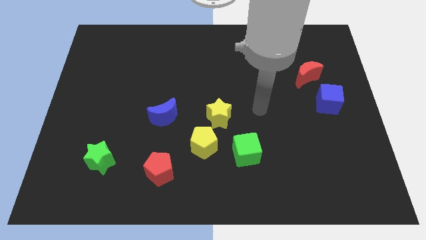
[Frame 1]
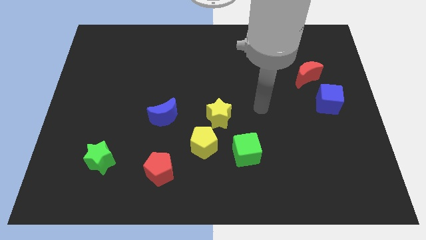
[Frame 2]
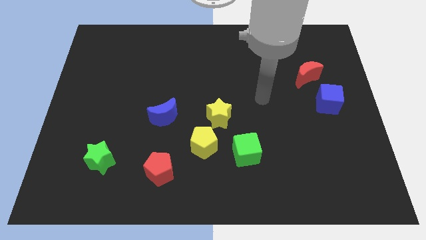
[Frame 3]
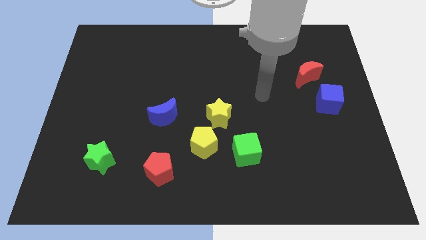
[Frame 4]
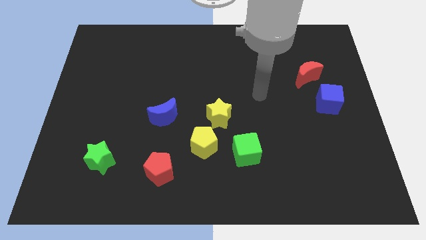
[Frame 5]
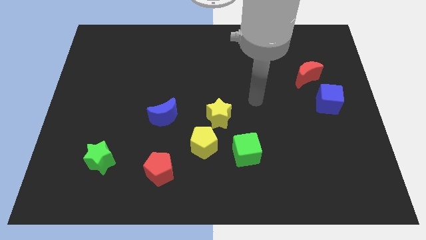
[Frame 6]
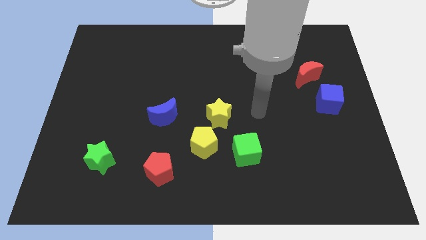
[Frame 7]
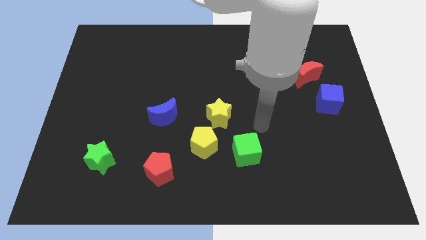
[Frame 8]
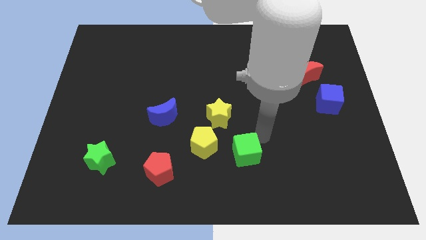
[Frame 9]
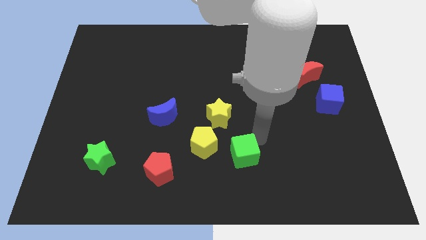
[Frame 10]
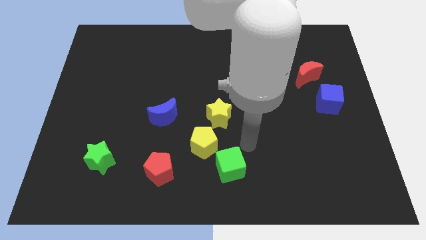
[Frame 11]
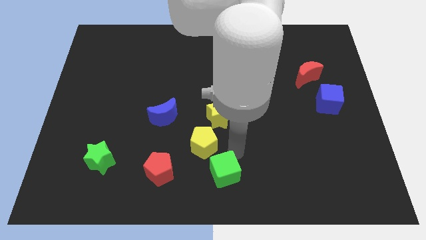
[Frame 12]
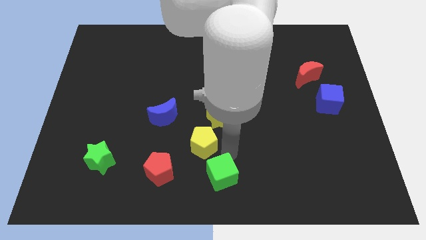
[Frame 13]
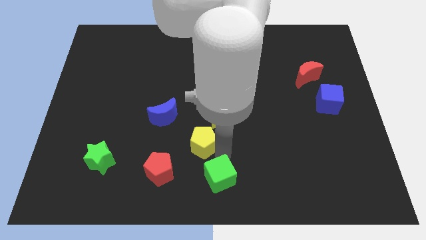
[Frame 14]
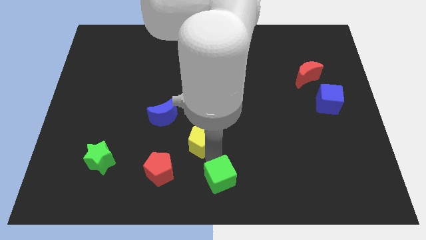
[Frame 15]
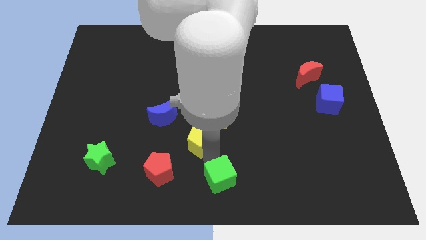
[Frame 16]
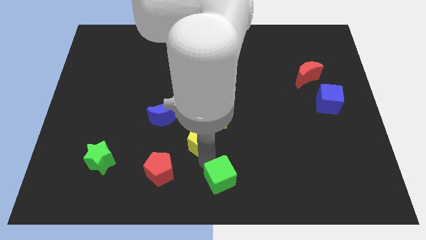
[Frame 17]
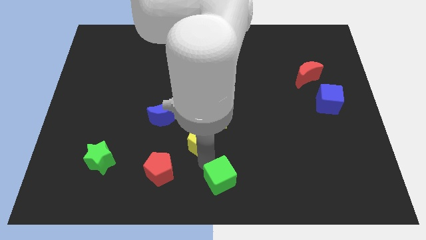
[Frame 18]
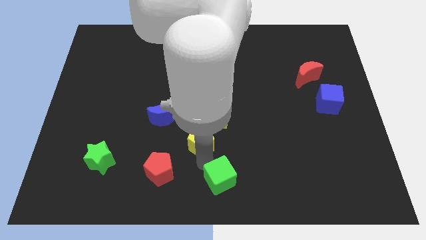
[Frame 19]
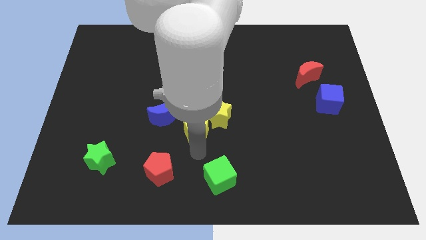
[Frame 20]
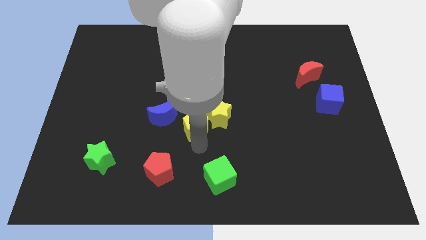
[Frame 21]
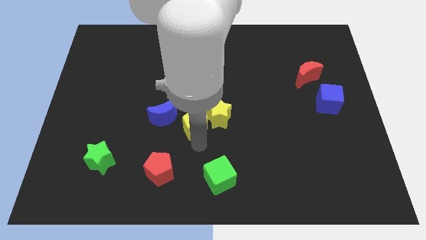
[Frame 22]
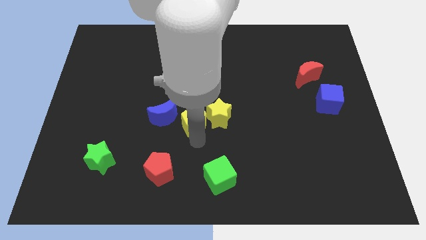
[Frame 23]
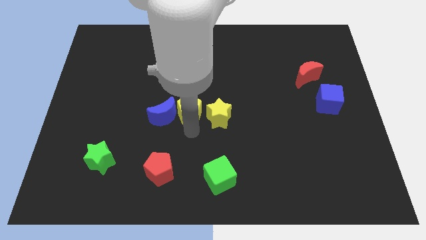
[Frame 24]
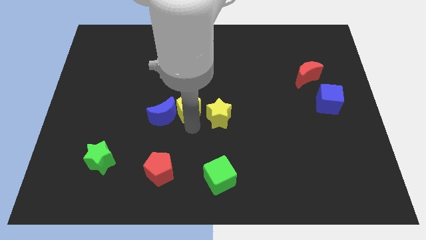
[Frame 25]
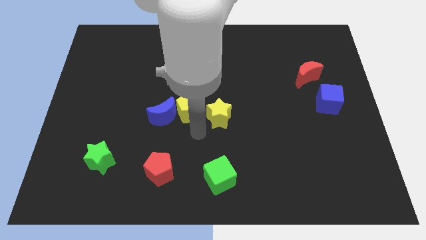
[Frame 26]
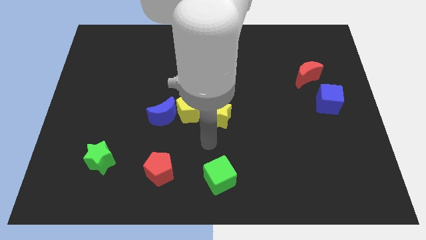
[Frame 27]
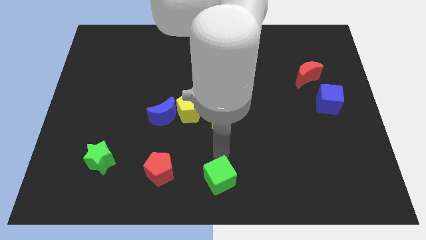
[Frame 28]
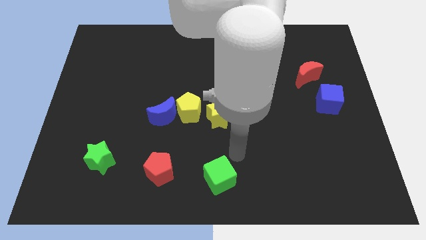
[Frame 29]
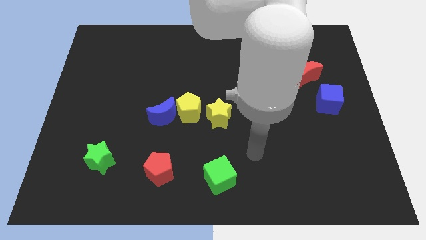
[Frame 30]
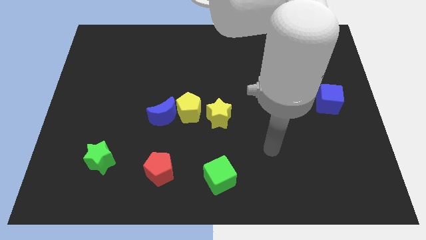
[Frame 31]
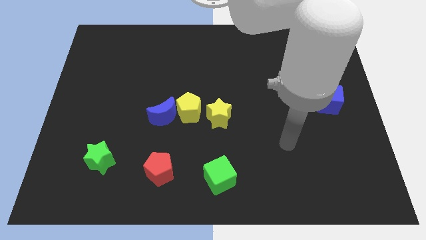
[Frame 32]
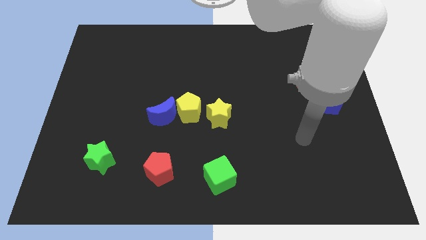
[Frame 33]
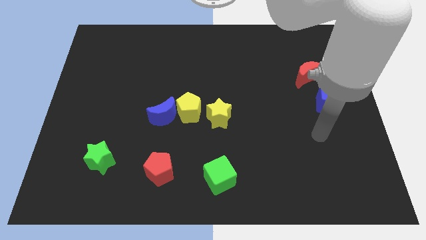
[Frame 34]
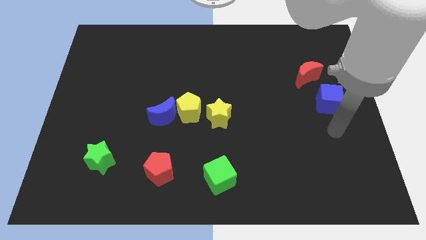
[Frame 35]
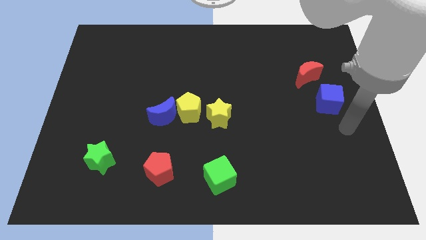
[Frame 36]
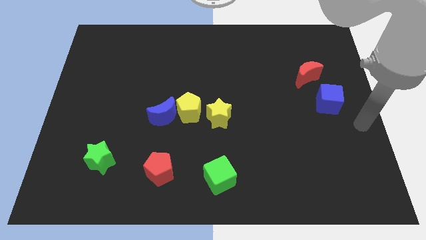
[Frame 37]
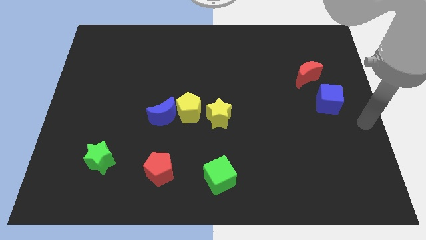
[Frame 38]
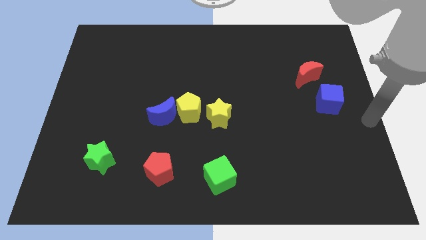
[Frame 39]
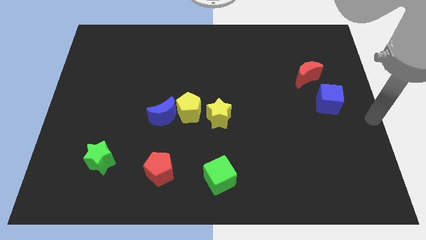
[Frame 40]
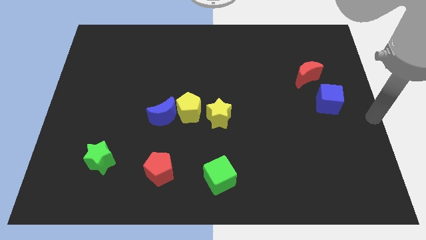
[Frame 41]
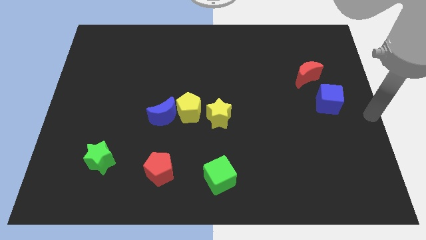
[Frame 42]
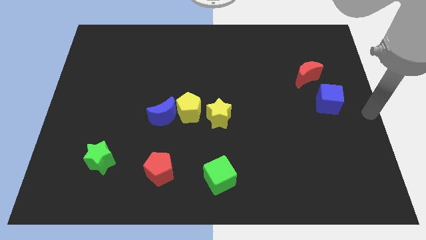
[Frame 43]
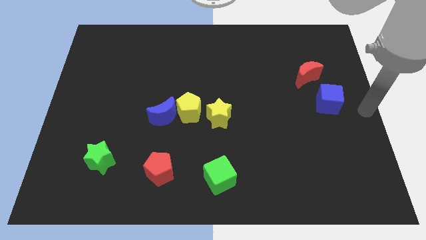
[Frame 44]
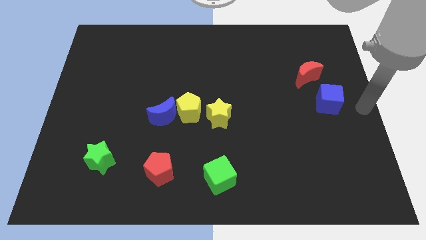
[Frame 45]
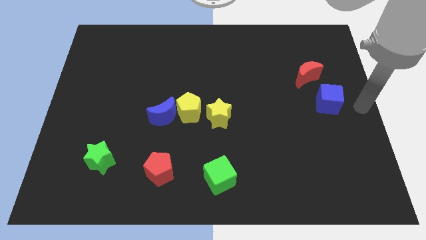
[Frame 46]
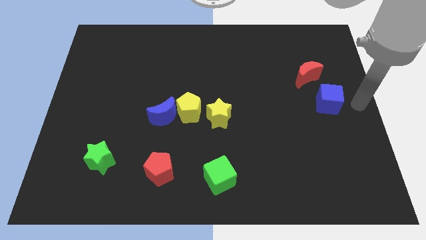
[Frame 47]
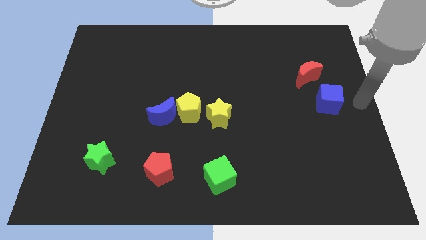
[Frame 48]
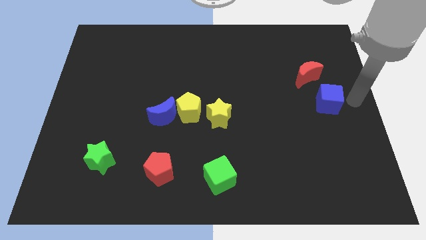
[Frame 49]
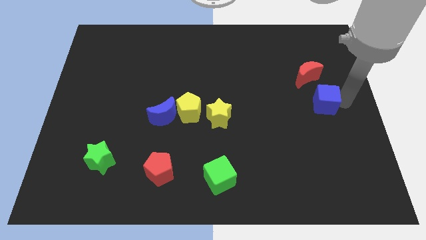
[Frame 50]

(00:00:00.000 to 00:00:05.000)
place the arm right to the blue cube

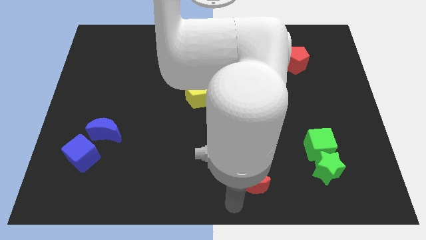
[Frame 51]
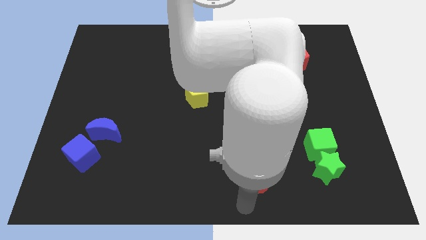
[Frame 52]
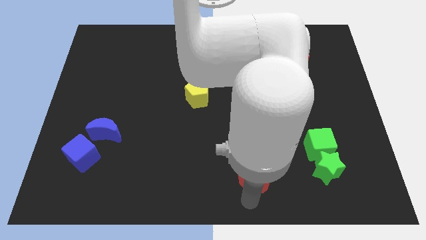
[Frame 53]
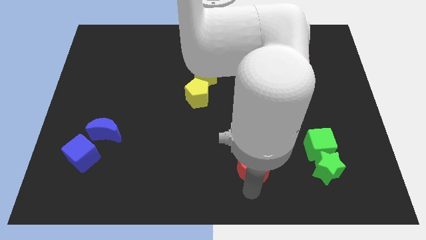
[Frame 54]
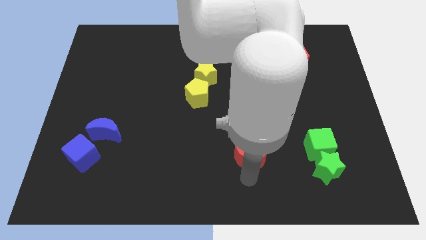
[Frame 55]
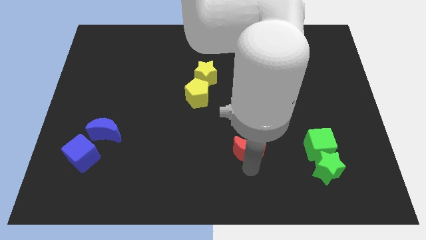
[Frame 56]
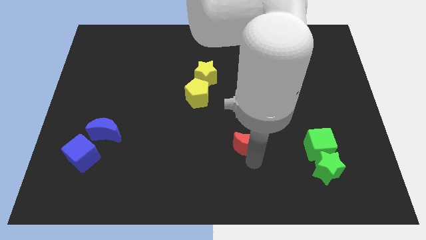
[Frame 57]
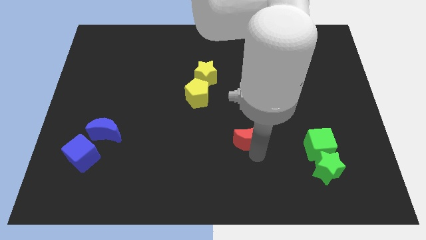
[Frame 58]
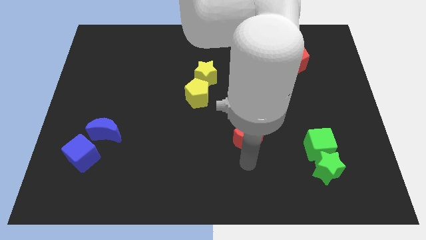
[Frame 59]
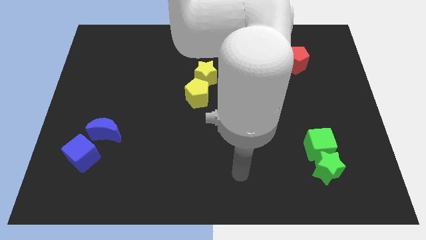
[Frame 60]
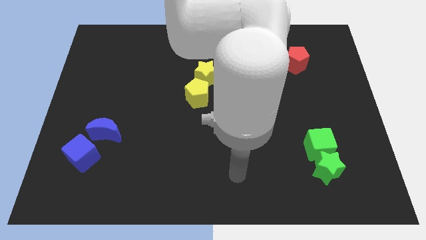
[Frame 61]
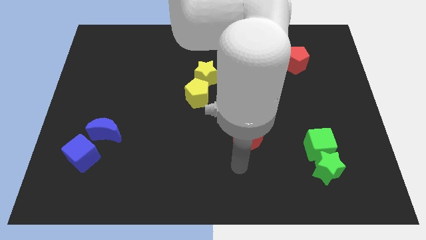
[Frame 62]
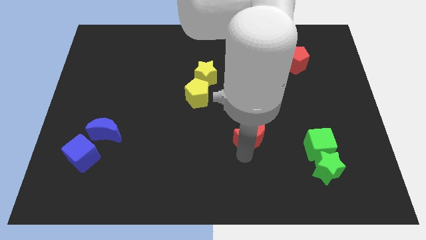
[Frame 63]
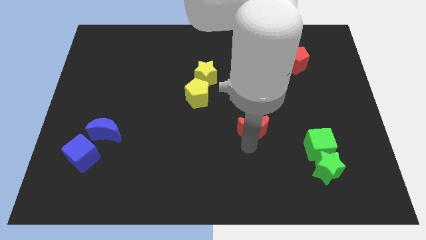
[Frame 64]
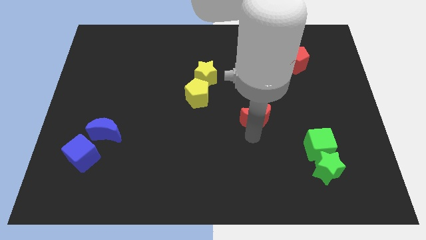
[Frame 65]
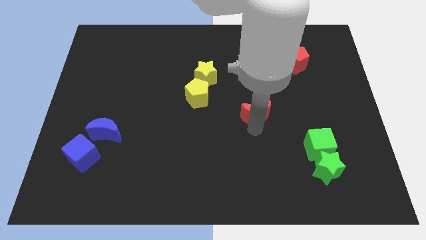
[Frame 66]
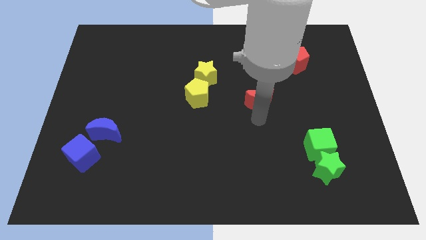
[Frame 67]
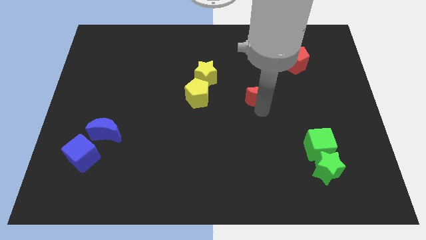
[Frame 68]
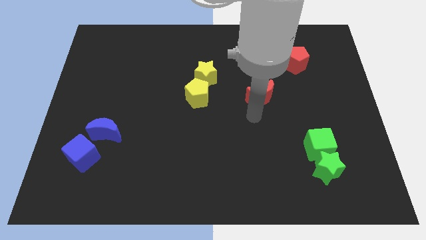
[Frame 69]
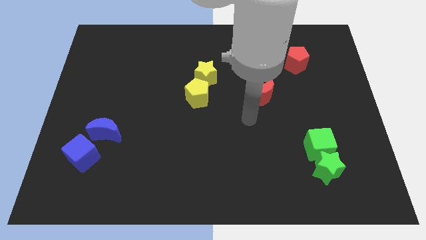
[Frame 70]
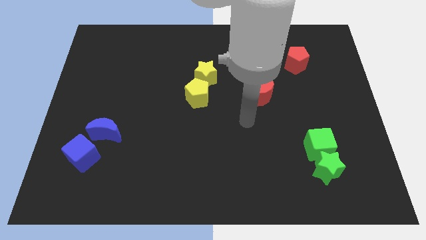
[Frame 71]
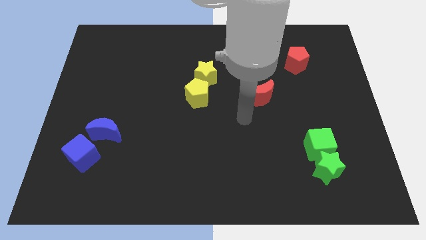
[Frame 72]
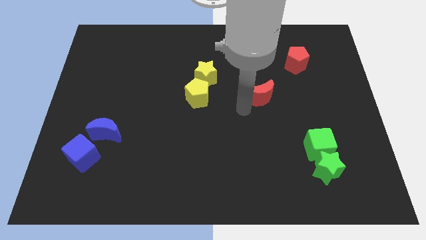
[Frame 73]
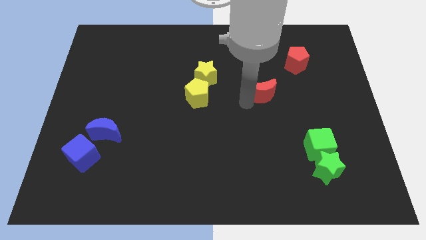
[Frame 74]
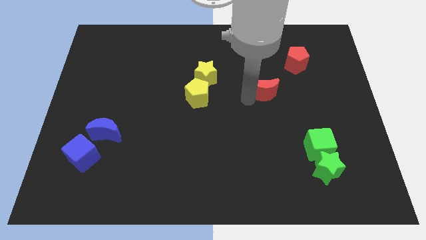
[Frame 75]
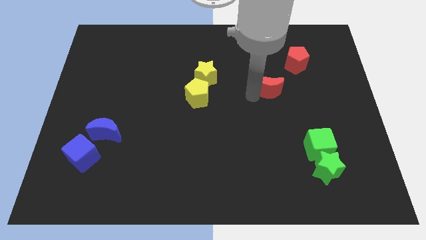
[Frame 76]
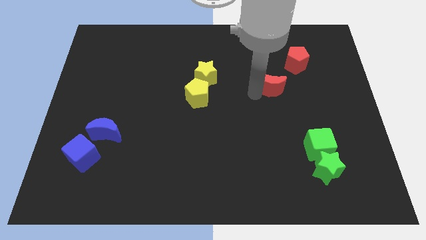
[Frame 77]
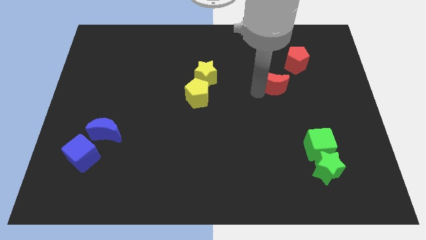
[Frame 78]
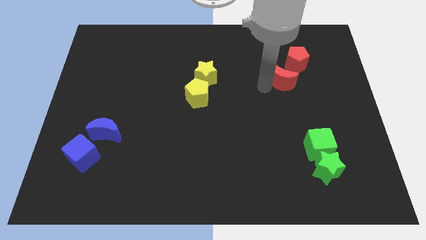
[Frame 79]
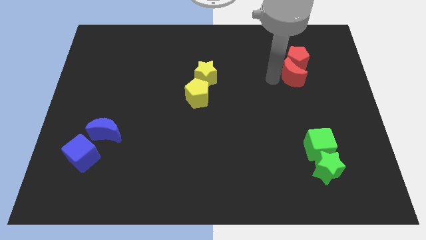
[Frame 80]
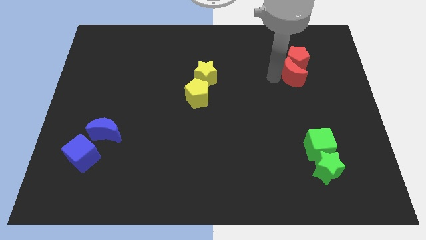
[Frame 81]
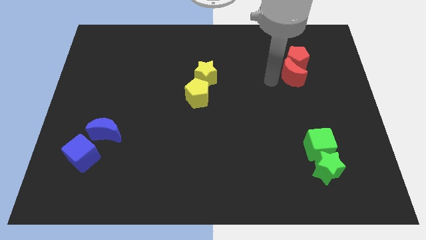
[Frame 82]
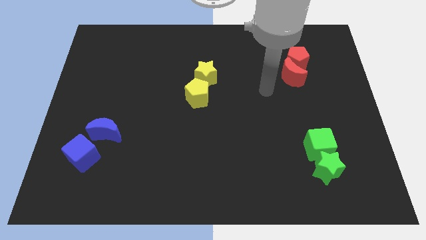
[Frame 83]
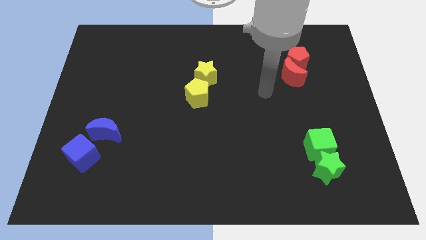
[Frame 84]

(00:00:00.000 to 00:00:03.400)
move red moon close to the red pentagon

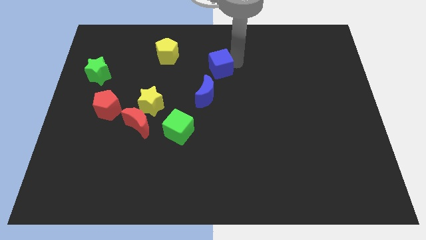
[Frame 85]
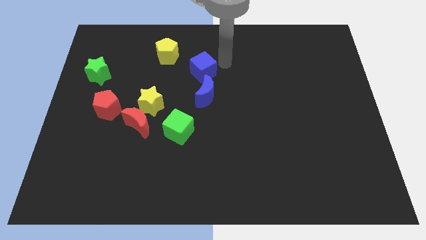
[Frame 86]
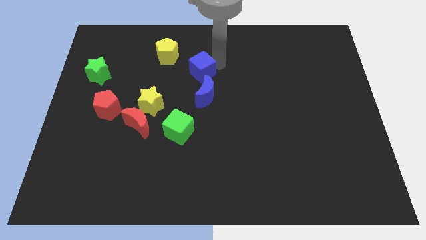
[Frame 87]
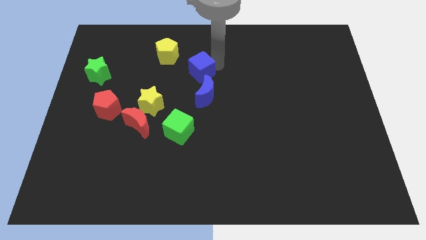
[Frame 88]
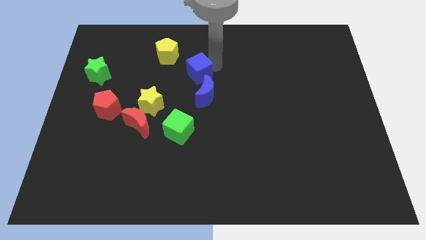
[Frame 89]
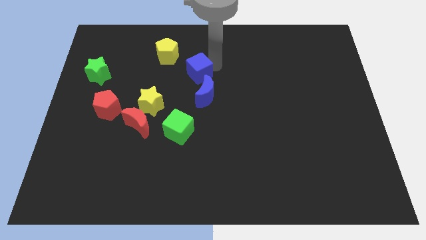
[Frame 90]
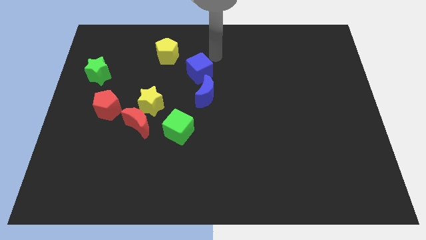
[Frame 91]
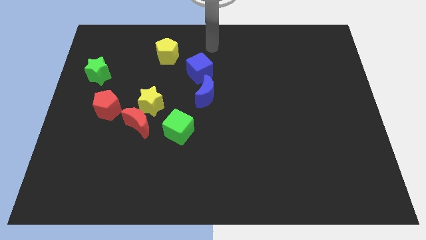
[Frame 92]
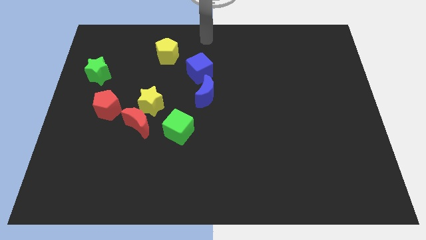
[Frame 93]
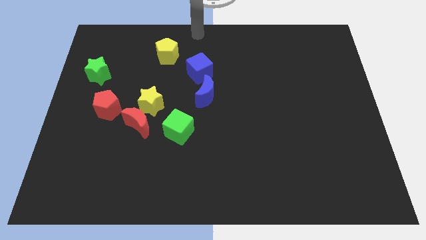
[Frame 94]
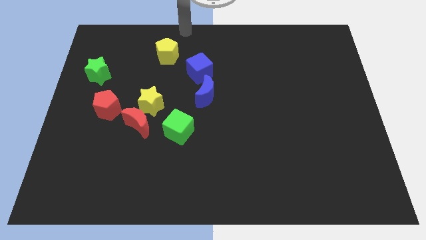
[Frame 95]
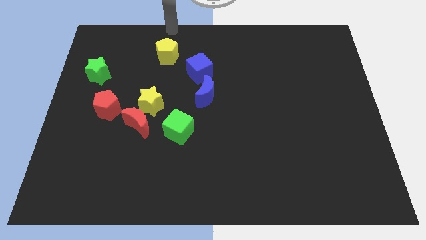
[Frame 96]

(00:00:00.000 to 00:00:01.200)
move blue cube slightly to the left
